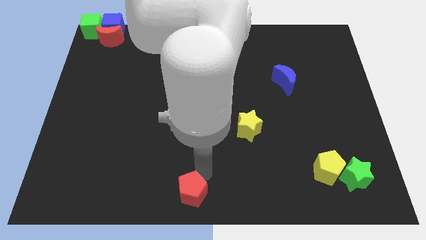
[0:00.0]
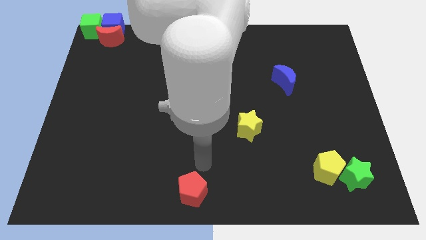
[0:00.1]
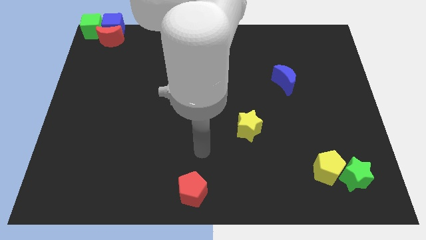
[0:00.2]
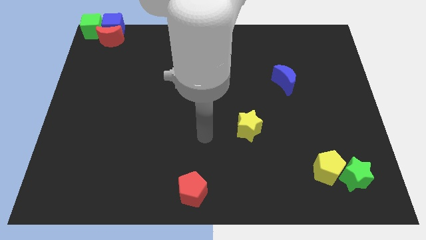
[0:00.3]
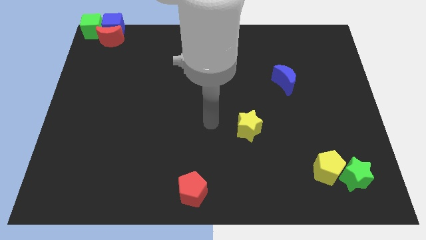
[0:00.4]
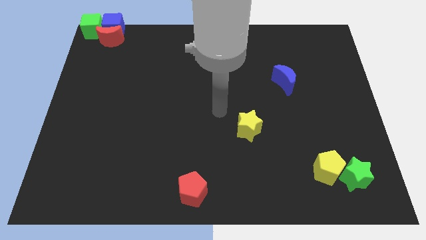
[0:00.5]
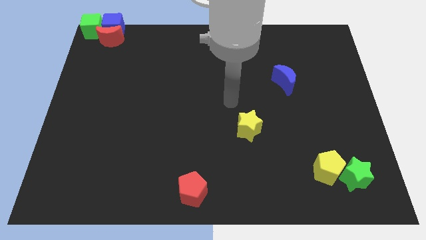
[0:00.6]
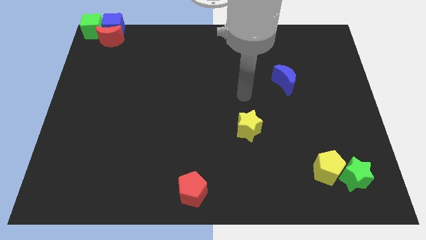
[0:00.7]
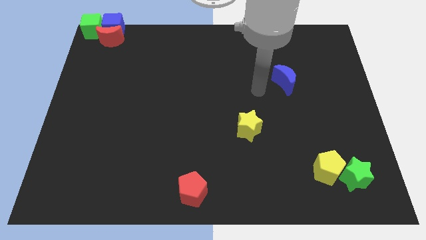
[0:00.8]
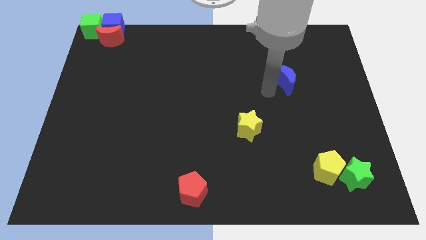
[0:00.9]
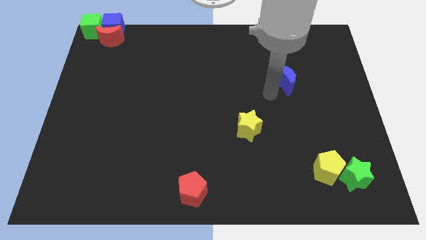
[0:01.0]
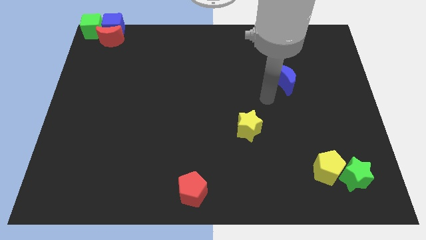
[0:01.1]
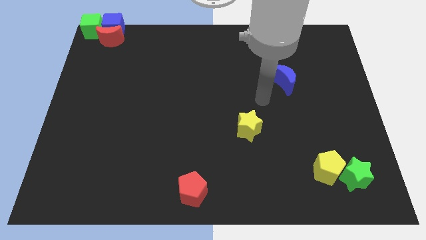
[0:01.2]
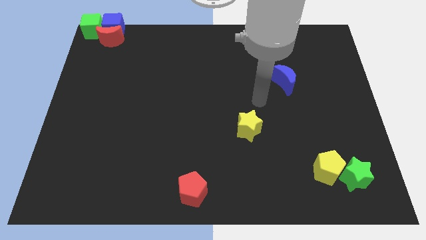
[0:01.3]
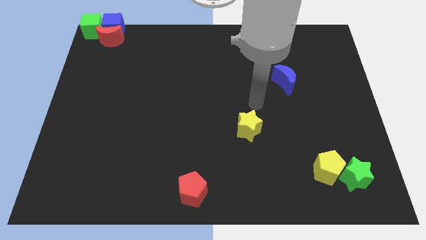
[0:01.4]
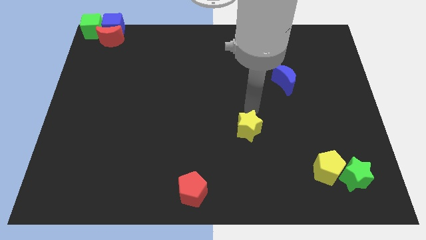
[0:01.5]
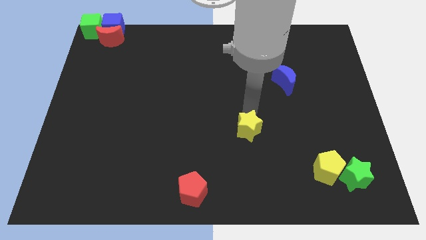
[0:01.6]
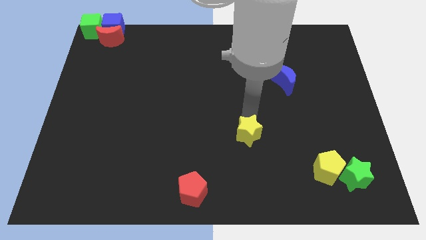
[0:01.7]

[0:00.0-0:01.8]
move your arm away from the red pentagon

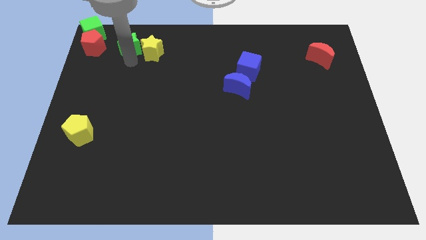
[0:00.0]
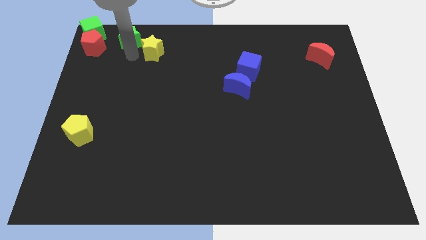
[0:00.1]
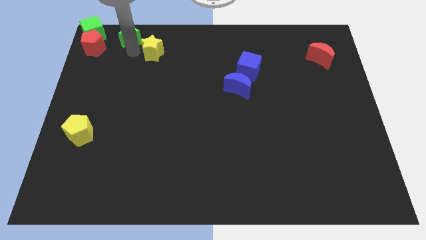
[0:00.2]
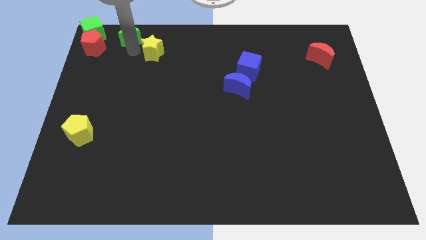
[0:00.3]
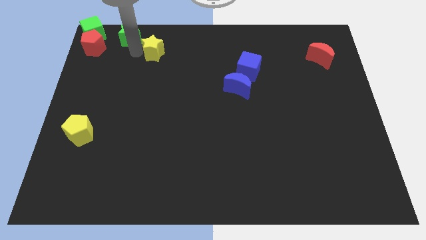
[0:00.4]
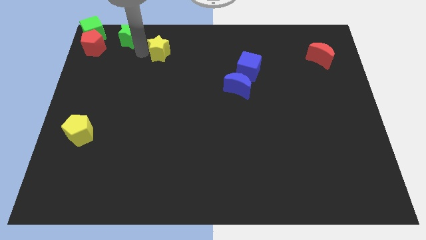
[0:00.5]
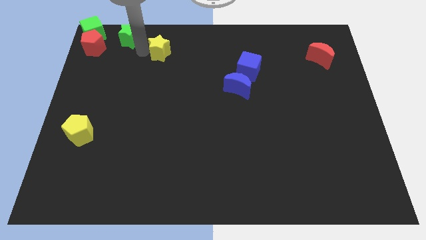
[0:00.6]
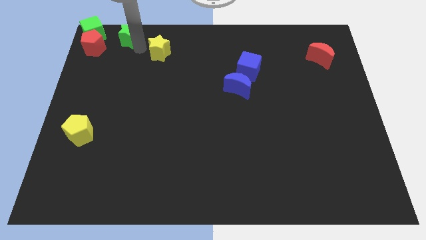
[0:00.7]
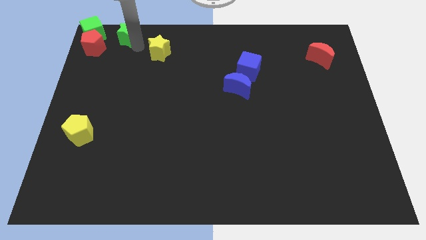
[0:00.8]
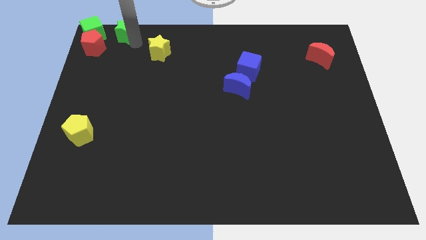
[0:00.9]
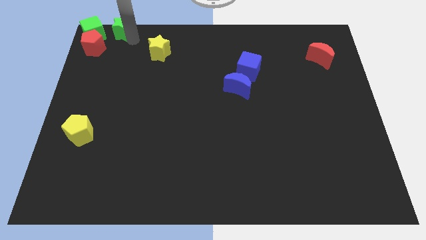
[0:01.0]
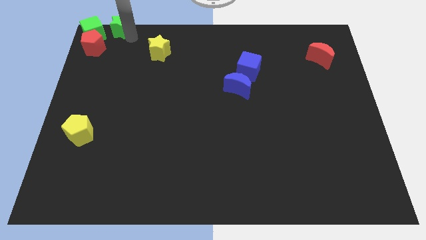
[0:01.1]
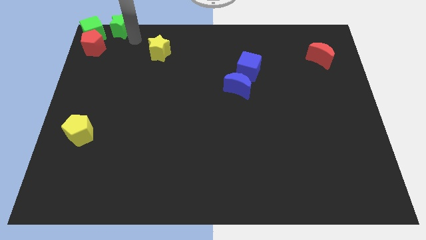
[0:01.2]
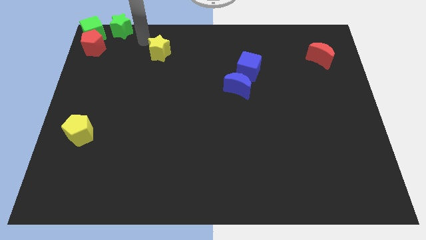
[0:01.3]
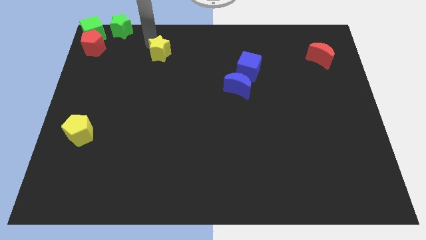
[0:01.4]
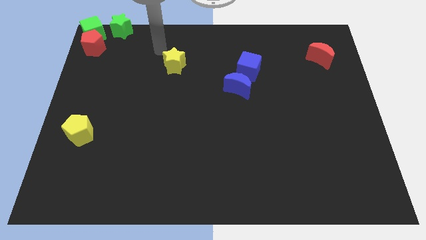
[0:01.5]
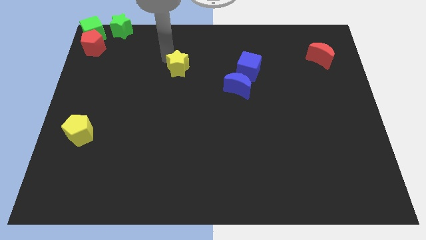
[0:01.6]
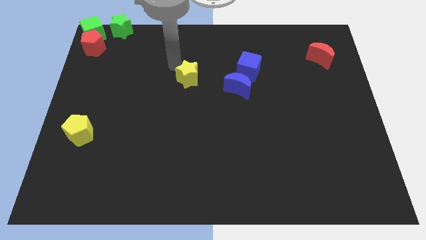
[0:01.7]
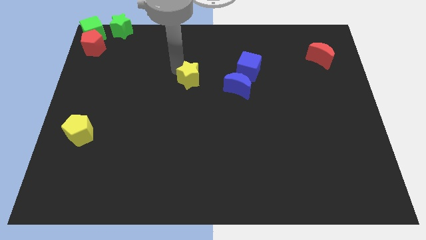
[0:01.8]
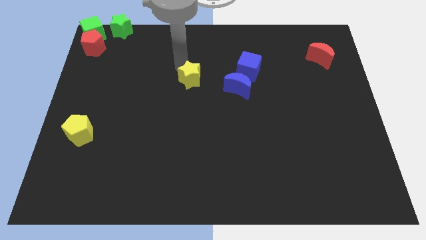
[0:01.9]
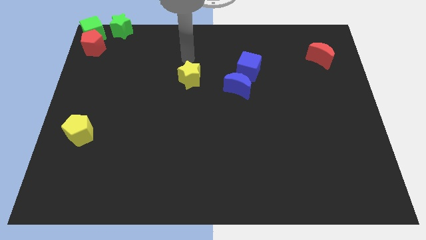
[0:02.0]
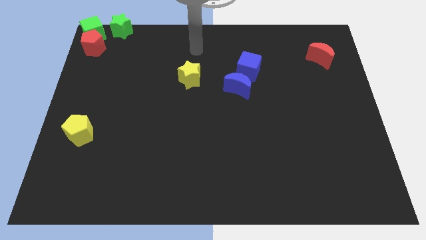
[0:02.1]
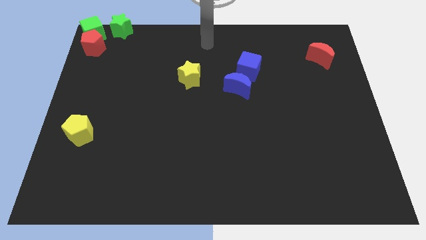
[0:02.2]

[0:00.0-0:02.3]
separate the yellow and green stars

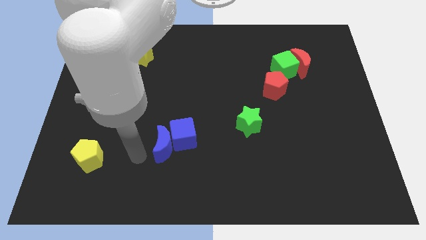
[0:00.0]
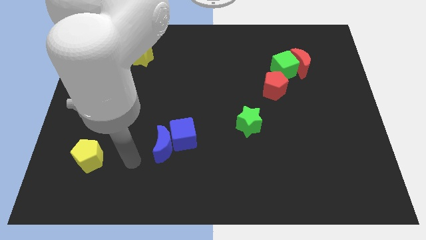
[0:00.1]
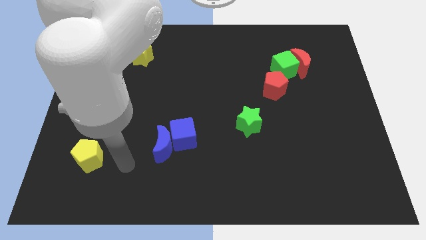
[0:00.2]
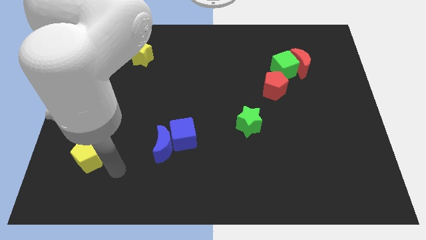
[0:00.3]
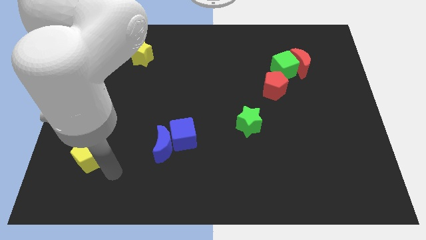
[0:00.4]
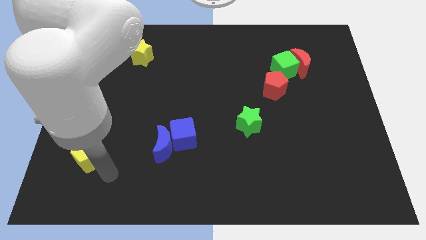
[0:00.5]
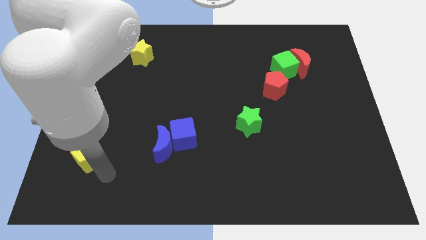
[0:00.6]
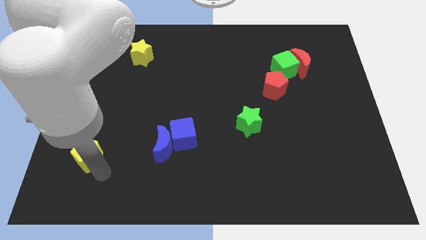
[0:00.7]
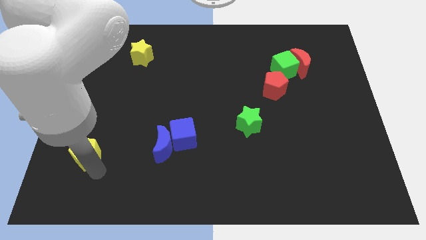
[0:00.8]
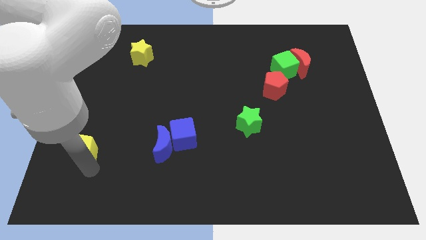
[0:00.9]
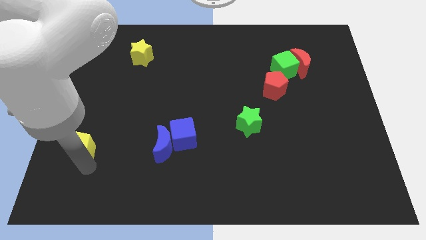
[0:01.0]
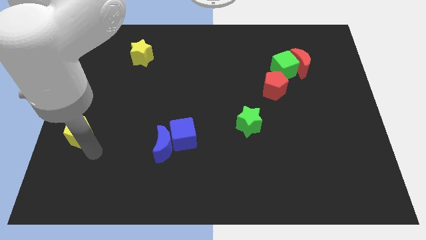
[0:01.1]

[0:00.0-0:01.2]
place yellow pentagon diagonal to the left of blue moon

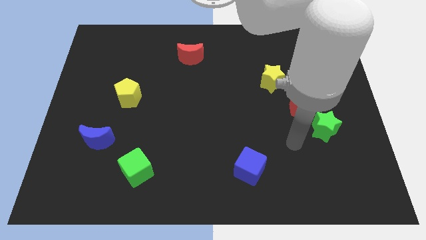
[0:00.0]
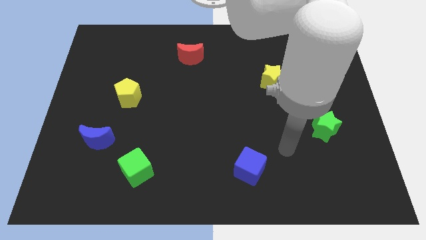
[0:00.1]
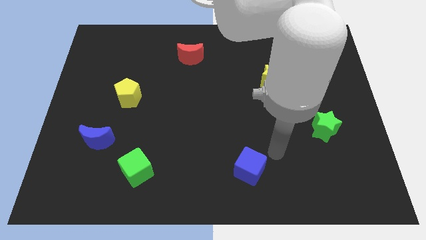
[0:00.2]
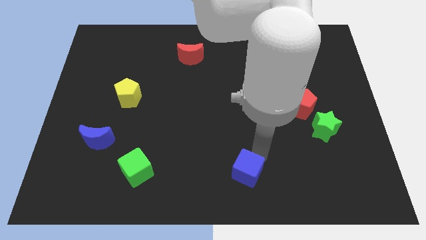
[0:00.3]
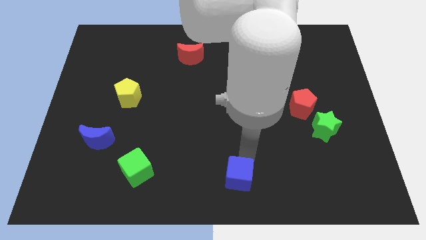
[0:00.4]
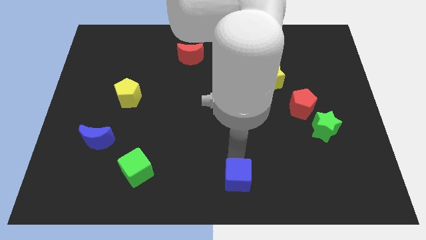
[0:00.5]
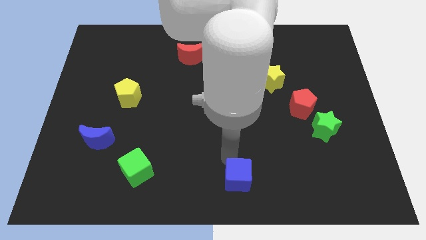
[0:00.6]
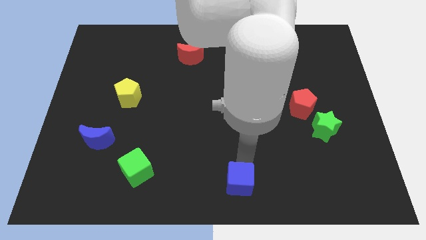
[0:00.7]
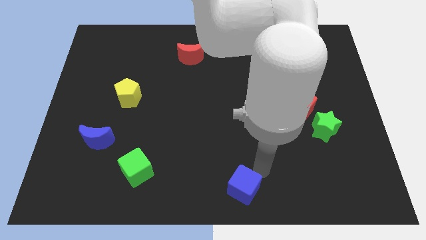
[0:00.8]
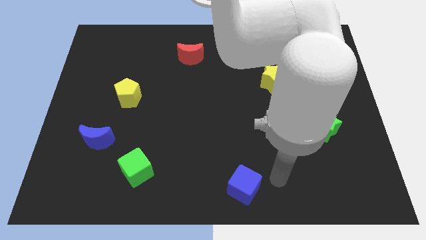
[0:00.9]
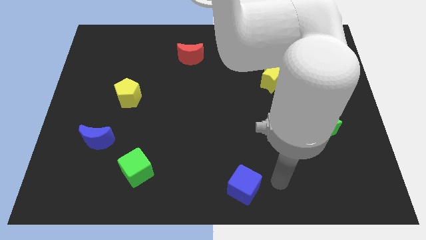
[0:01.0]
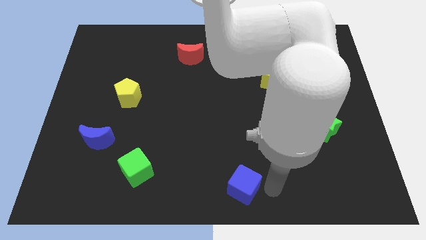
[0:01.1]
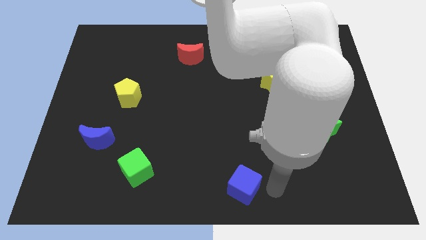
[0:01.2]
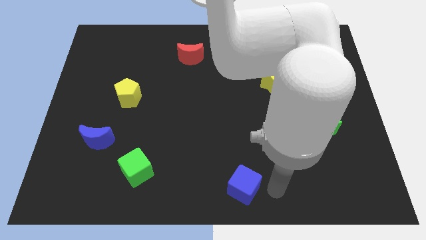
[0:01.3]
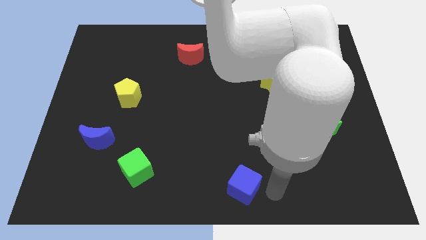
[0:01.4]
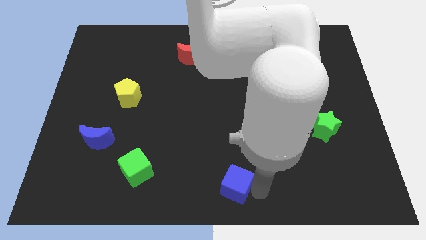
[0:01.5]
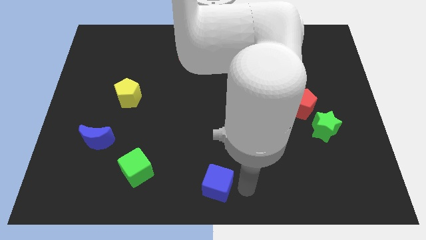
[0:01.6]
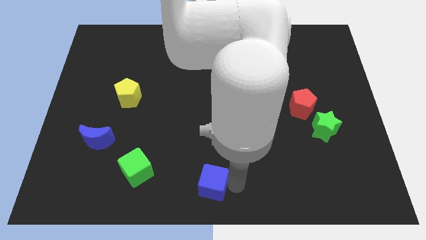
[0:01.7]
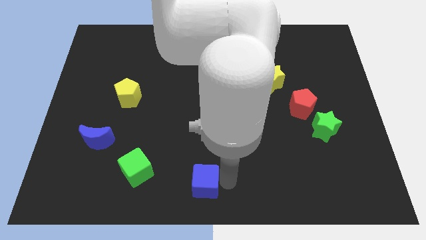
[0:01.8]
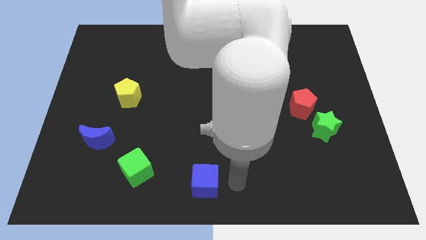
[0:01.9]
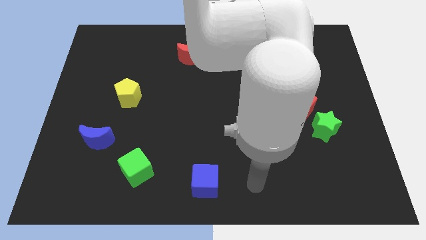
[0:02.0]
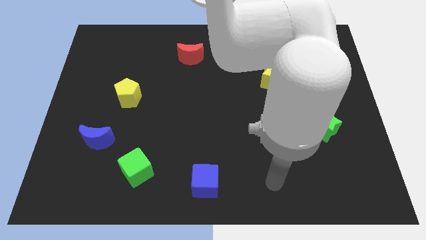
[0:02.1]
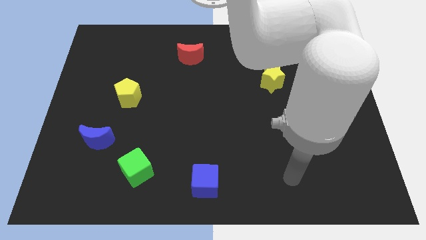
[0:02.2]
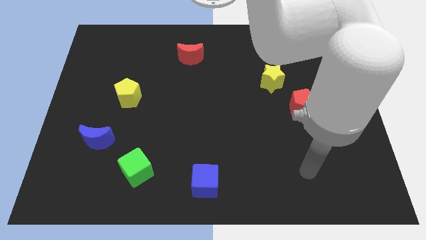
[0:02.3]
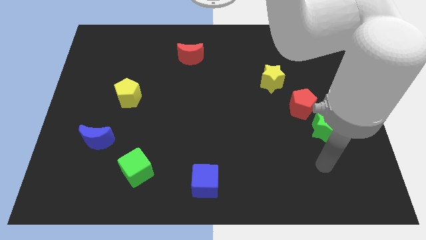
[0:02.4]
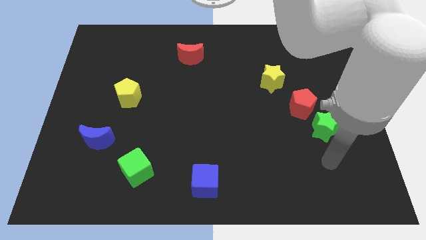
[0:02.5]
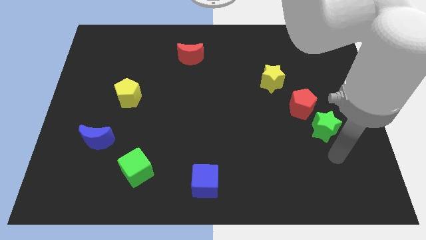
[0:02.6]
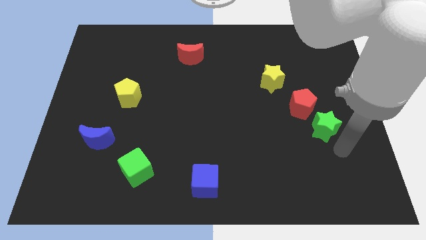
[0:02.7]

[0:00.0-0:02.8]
push the blue cube to the bottom center of the board

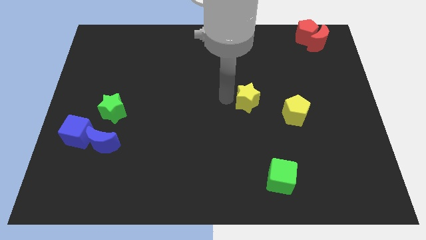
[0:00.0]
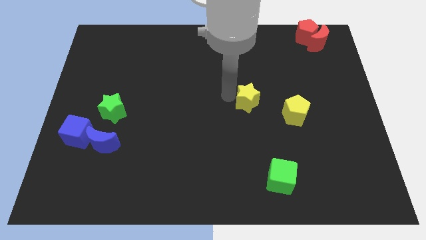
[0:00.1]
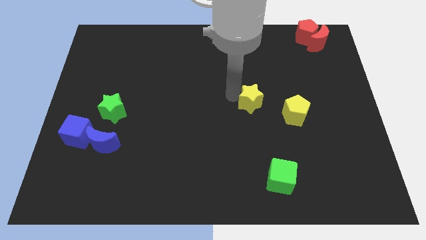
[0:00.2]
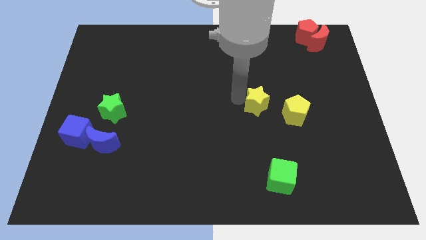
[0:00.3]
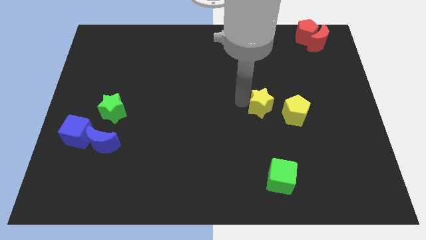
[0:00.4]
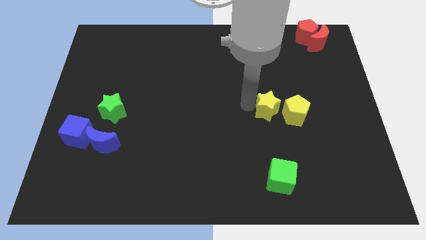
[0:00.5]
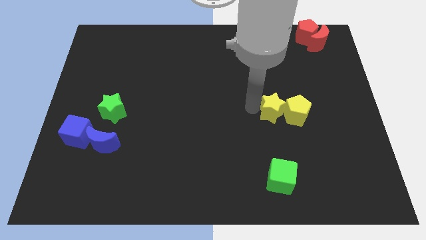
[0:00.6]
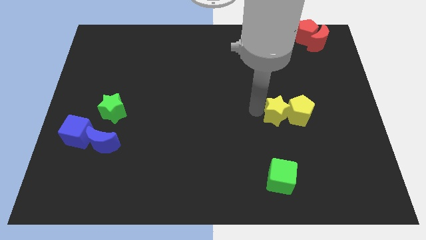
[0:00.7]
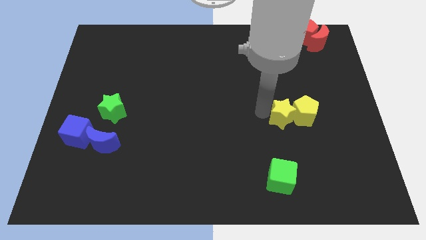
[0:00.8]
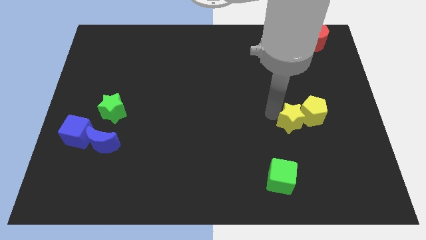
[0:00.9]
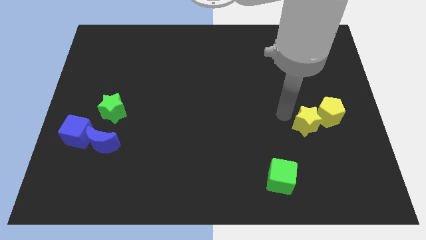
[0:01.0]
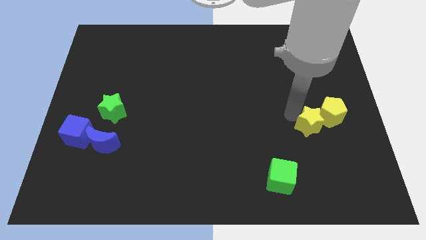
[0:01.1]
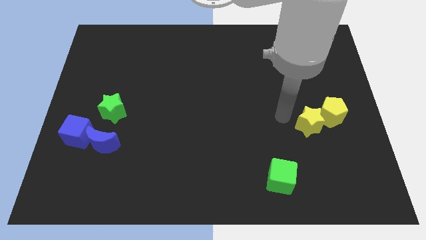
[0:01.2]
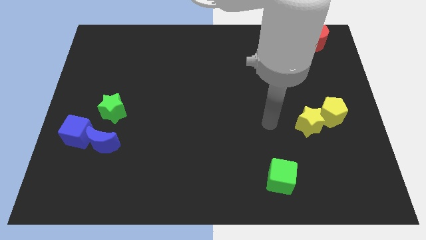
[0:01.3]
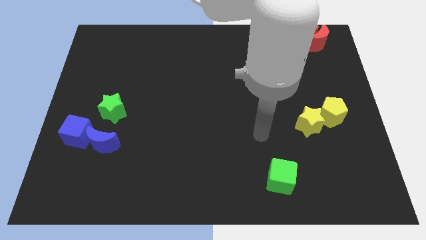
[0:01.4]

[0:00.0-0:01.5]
push the yellow star into the yellow pentagon
